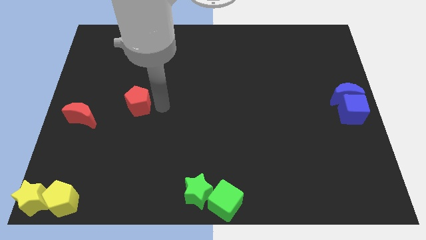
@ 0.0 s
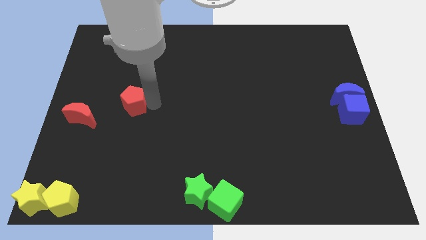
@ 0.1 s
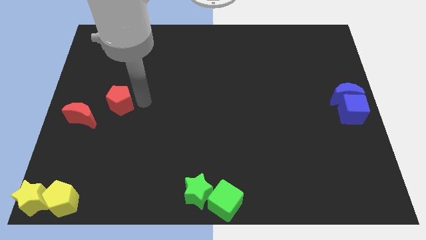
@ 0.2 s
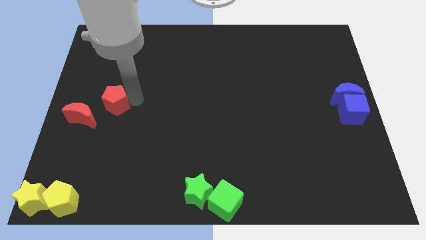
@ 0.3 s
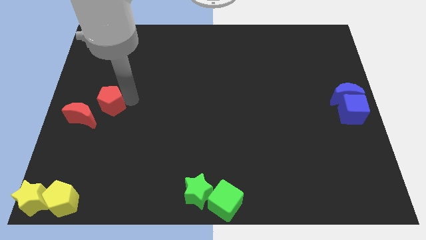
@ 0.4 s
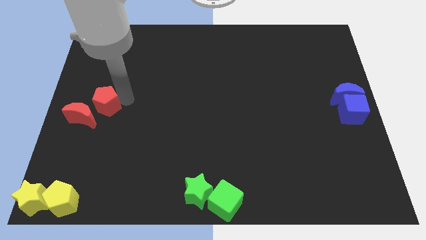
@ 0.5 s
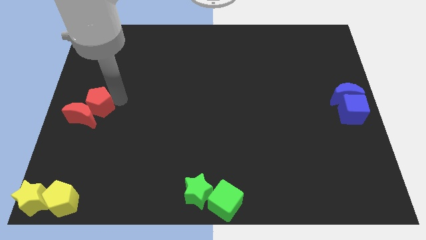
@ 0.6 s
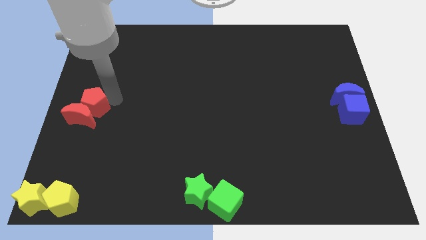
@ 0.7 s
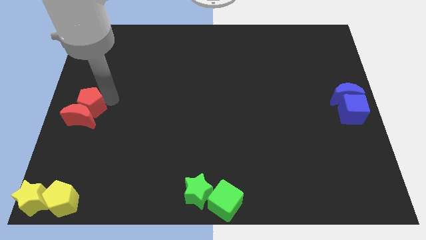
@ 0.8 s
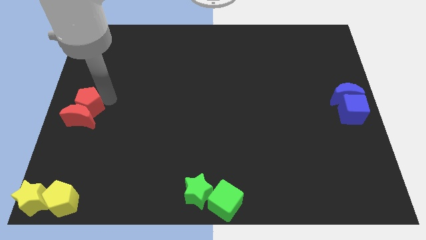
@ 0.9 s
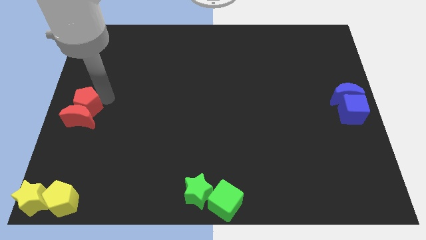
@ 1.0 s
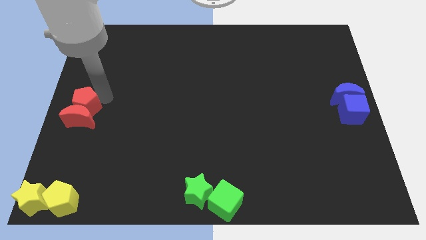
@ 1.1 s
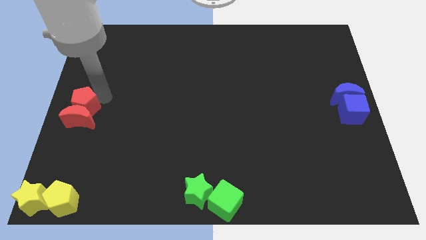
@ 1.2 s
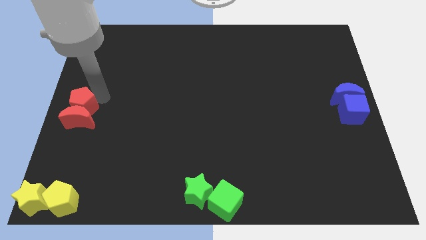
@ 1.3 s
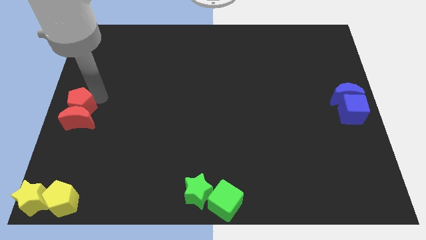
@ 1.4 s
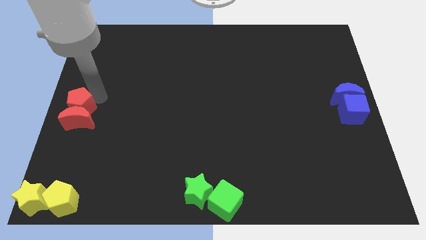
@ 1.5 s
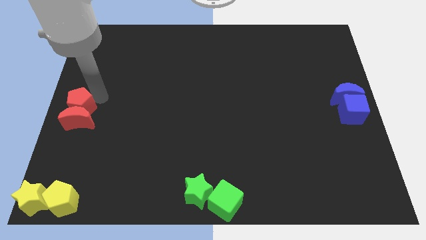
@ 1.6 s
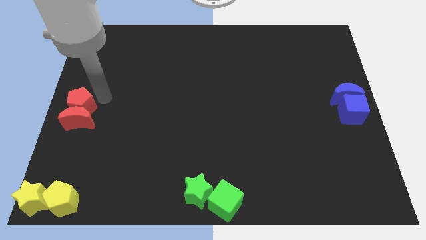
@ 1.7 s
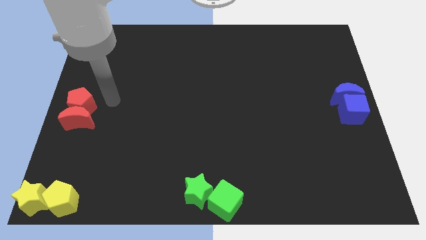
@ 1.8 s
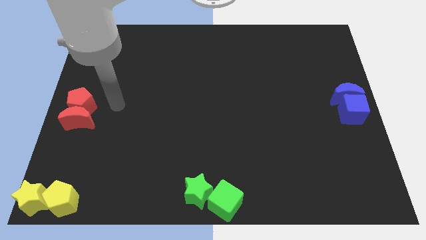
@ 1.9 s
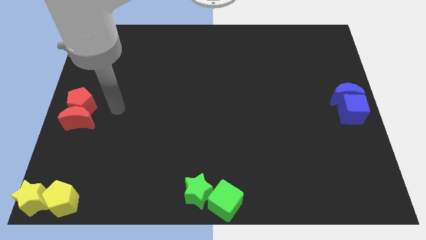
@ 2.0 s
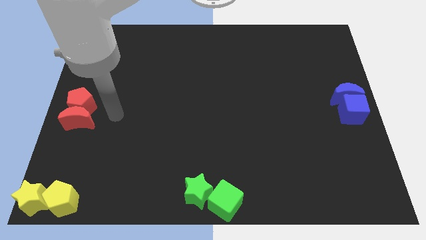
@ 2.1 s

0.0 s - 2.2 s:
place red pentagon to the top of the red moon

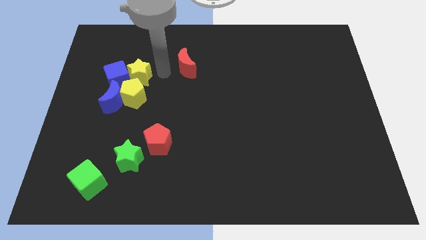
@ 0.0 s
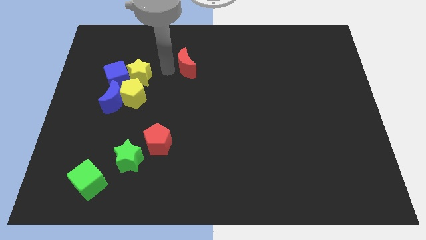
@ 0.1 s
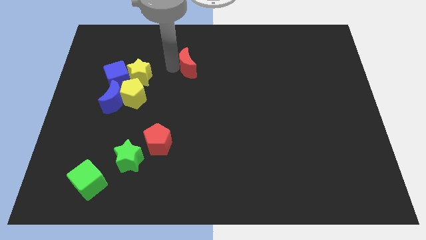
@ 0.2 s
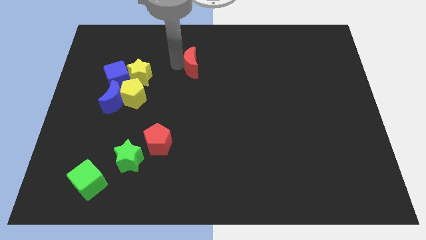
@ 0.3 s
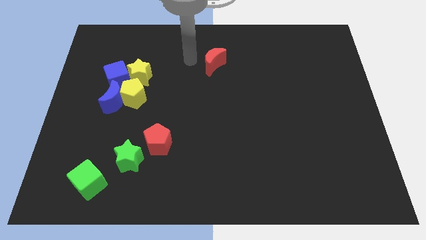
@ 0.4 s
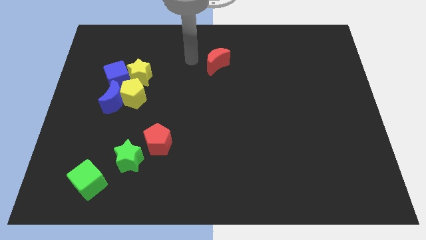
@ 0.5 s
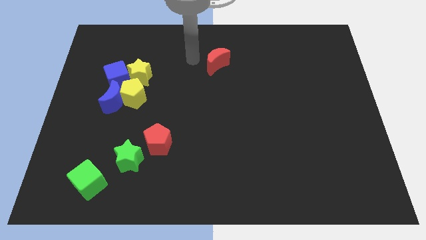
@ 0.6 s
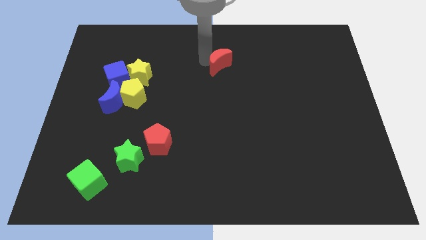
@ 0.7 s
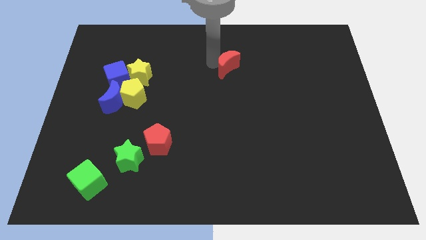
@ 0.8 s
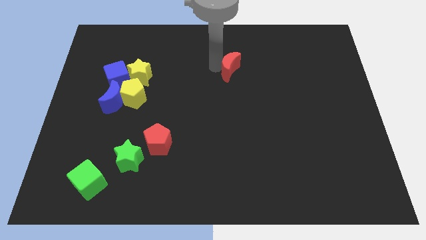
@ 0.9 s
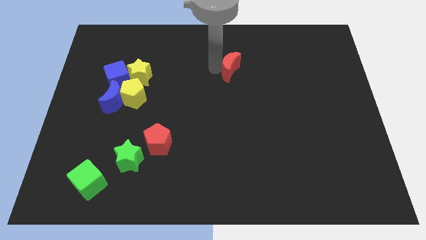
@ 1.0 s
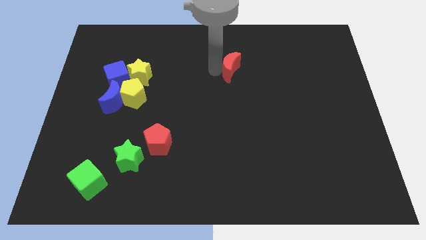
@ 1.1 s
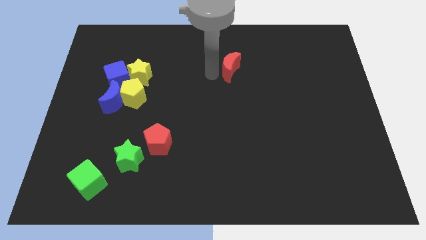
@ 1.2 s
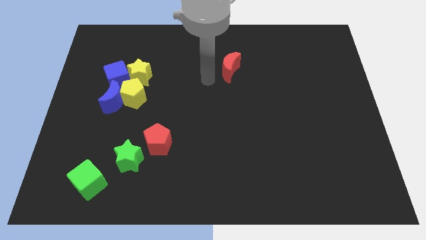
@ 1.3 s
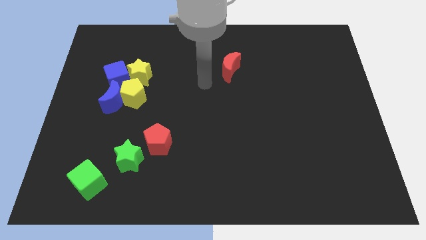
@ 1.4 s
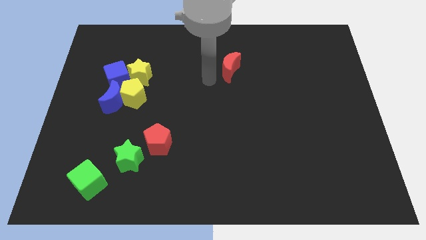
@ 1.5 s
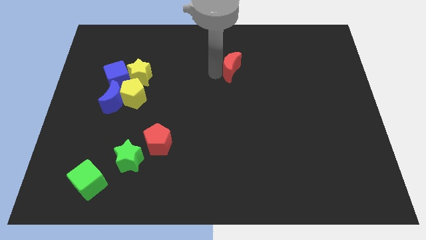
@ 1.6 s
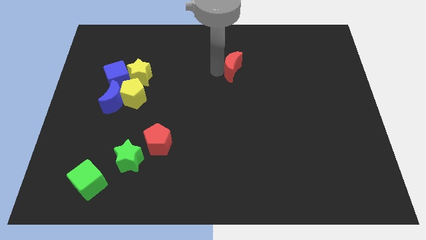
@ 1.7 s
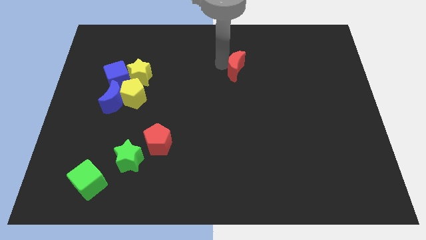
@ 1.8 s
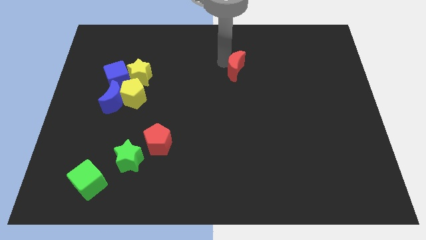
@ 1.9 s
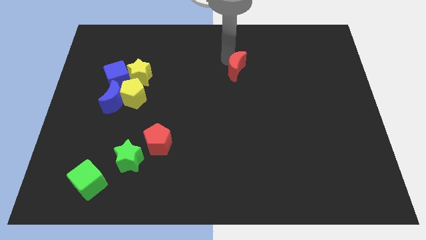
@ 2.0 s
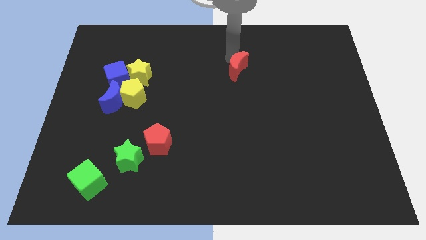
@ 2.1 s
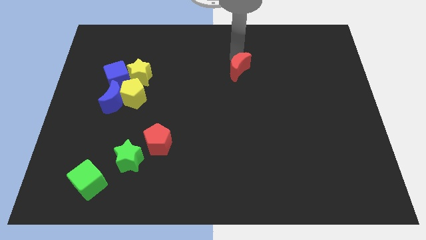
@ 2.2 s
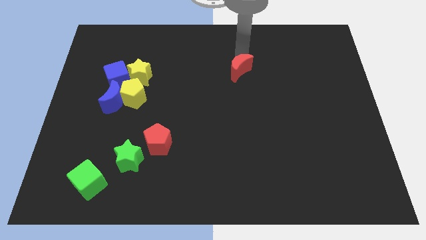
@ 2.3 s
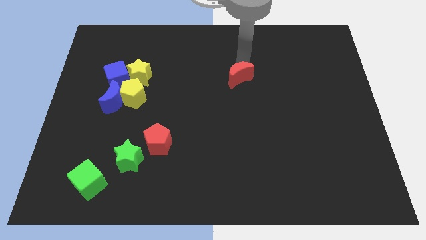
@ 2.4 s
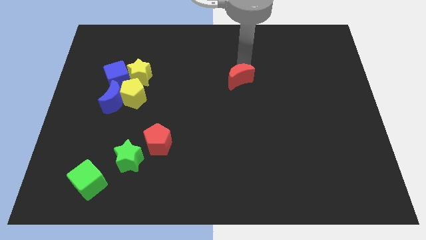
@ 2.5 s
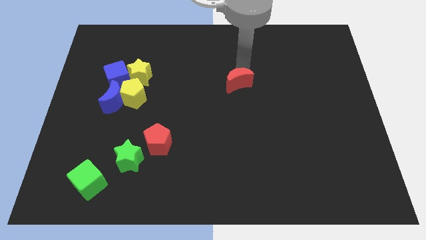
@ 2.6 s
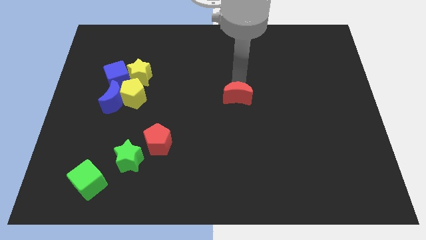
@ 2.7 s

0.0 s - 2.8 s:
place the red crescent at the center of the board

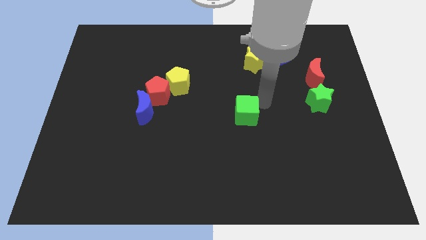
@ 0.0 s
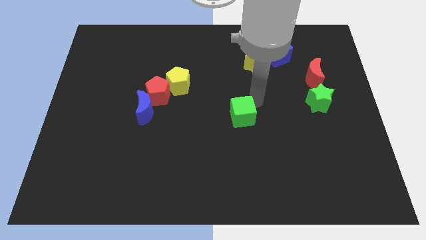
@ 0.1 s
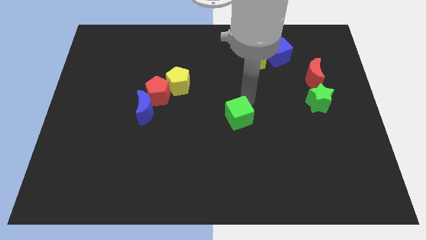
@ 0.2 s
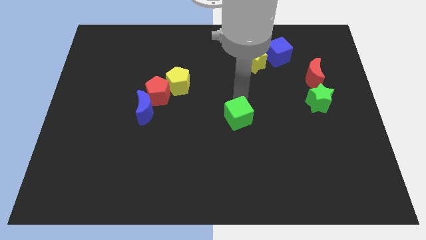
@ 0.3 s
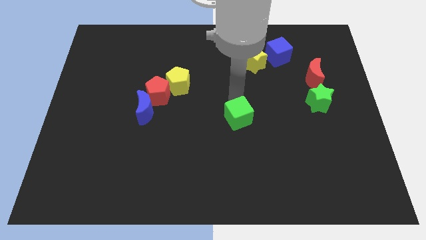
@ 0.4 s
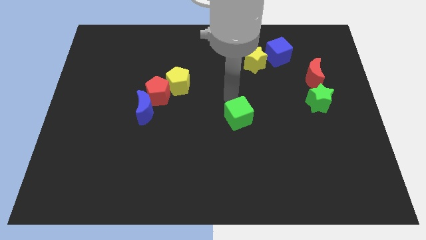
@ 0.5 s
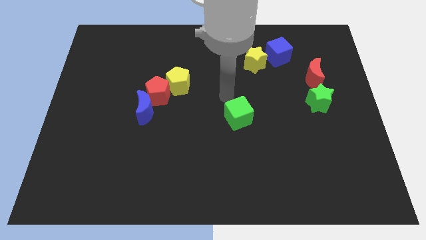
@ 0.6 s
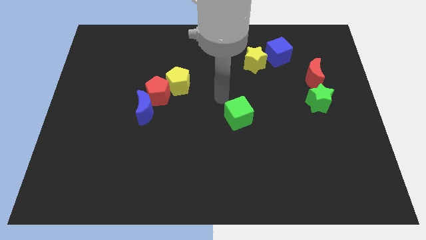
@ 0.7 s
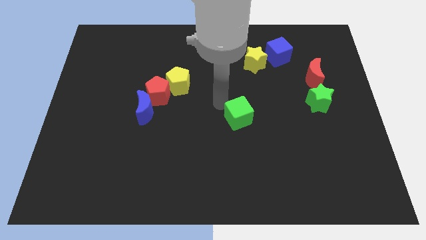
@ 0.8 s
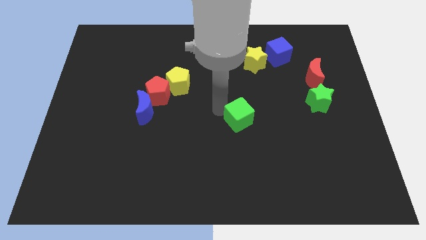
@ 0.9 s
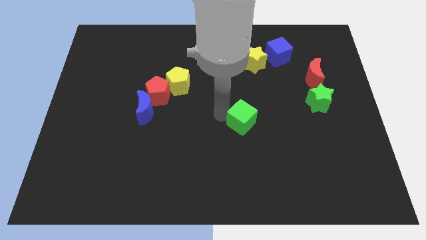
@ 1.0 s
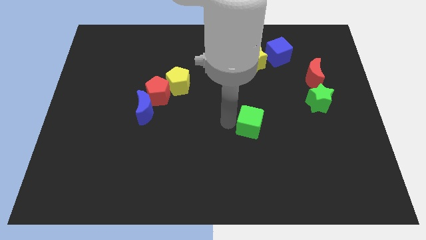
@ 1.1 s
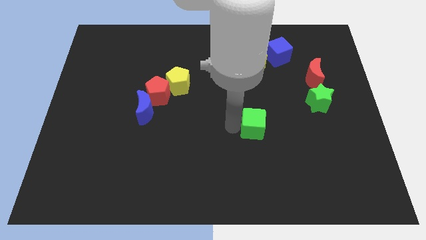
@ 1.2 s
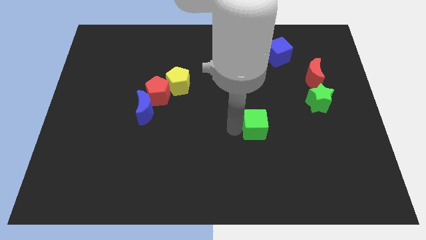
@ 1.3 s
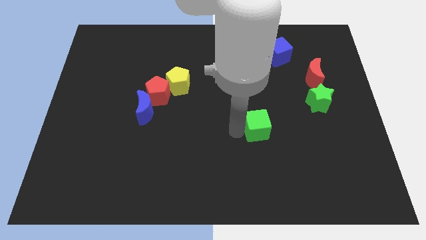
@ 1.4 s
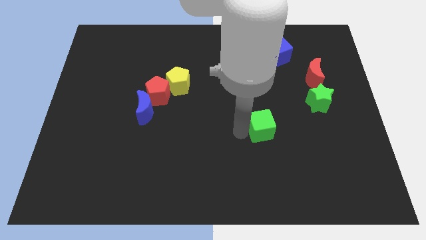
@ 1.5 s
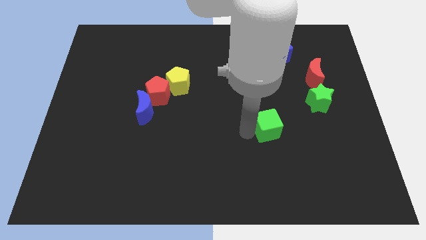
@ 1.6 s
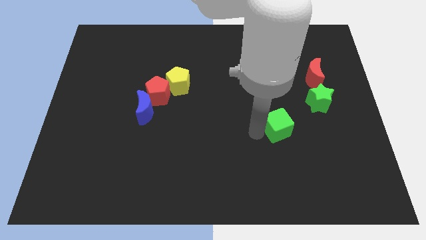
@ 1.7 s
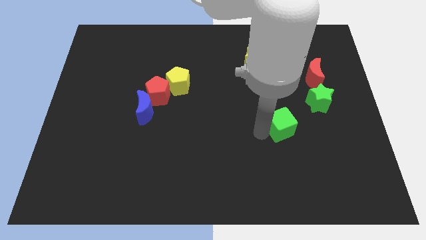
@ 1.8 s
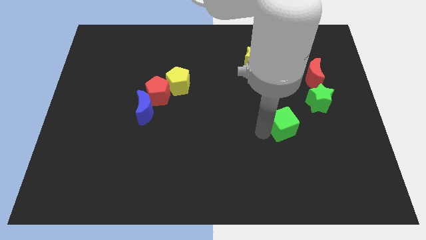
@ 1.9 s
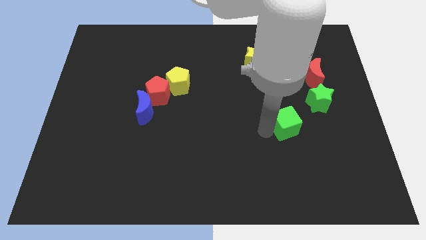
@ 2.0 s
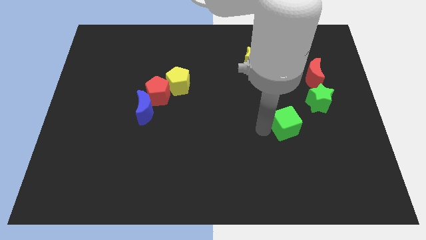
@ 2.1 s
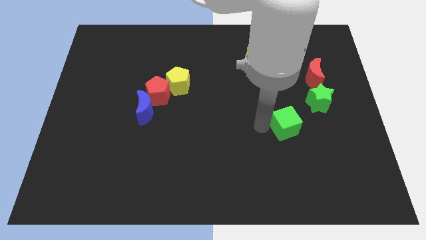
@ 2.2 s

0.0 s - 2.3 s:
push the green cube to the bottom left of the green star

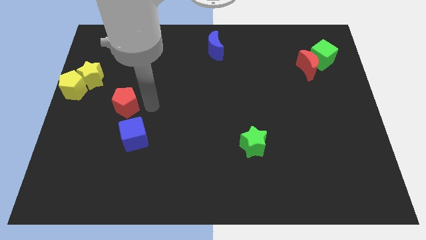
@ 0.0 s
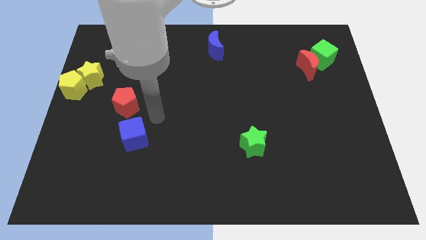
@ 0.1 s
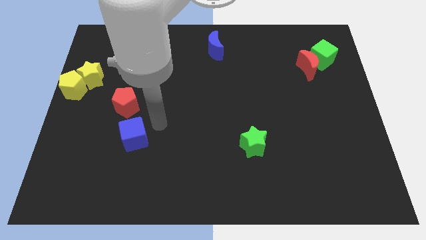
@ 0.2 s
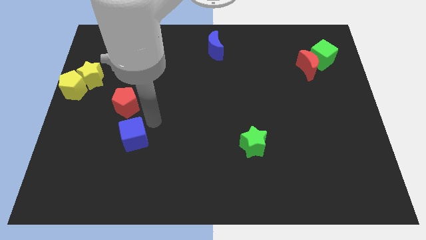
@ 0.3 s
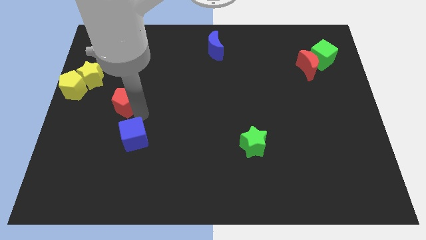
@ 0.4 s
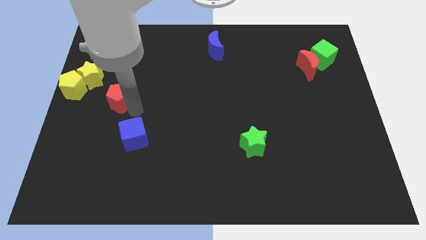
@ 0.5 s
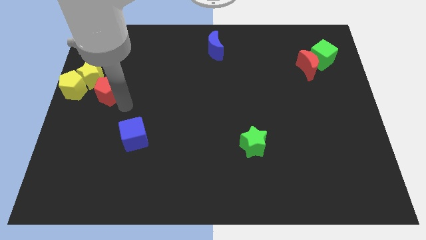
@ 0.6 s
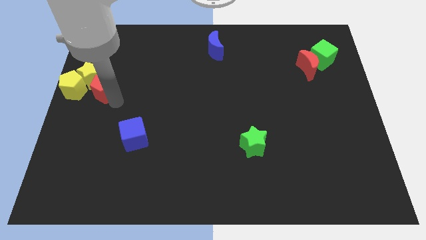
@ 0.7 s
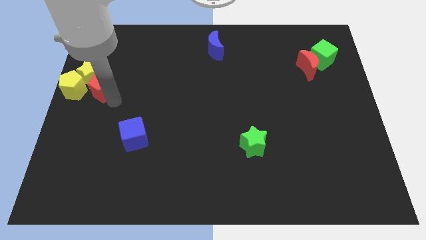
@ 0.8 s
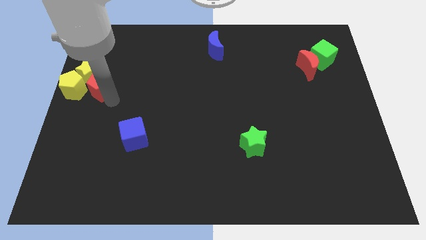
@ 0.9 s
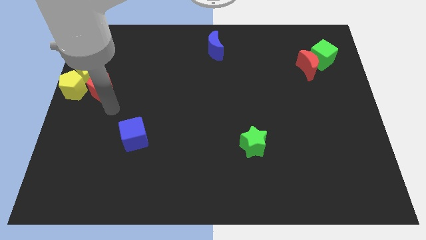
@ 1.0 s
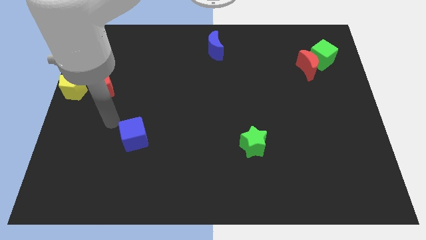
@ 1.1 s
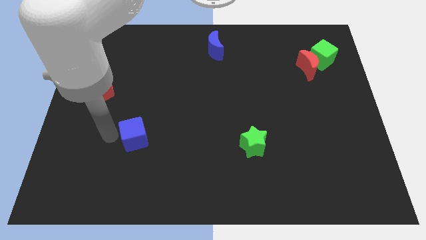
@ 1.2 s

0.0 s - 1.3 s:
push the red pentagon in to yellow blocks

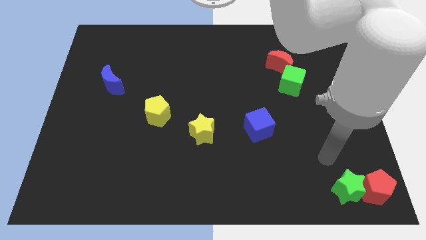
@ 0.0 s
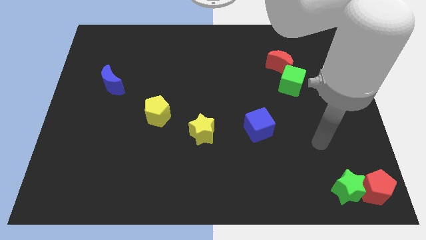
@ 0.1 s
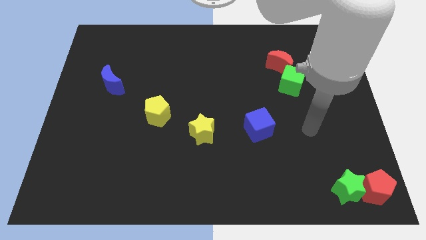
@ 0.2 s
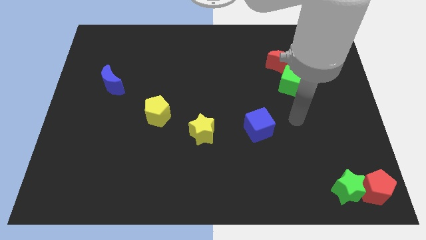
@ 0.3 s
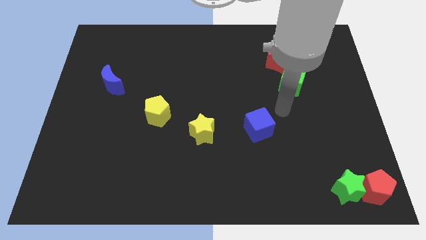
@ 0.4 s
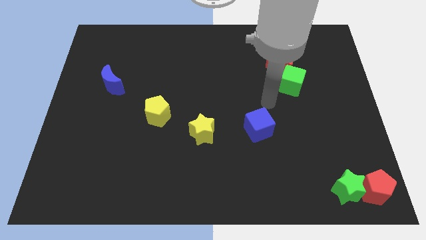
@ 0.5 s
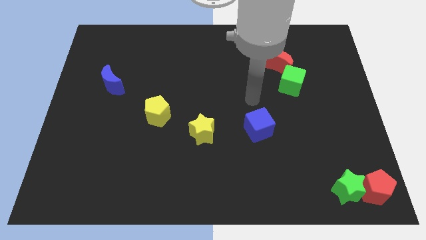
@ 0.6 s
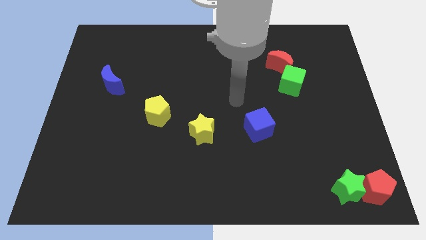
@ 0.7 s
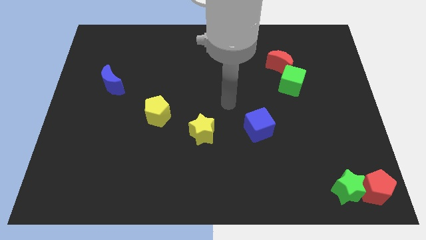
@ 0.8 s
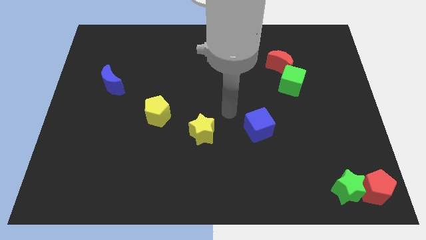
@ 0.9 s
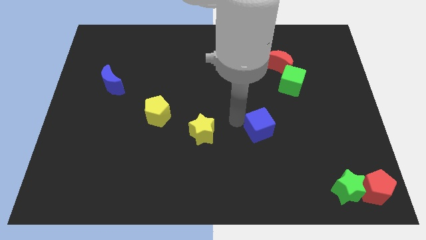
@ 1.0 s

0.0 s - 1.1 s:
touch the blue cube with your arm
